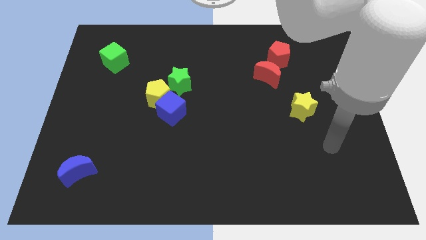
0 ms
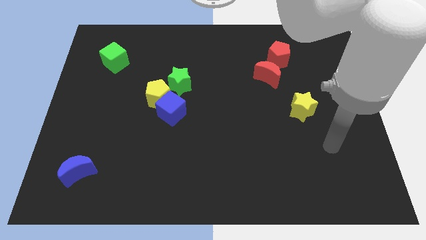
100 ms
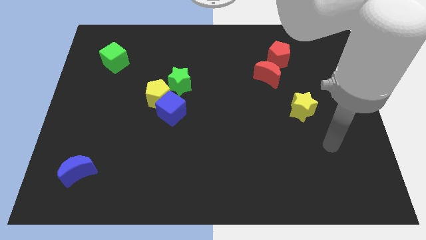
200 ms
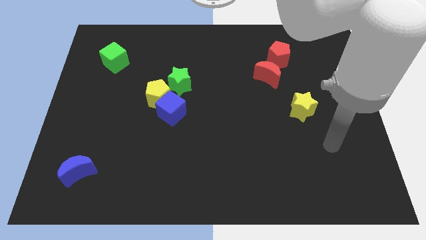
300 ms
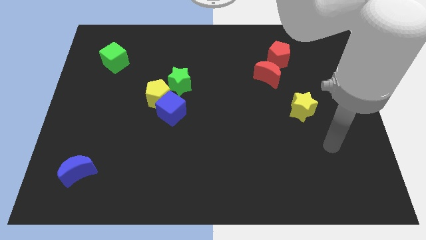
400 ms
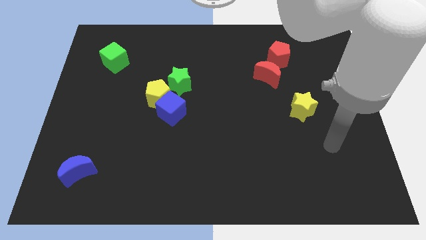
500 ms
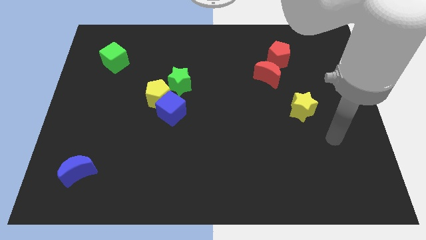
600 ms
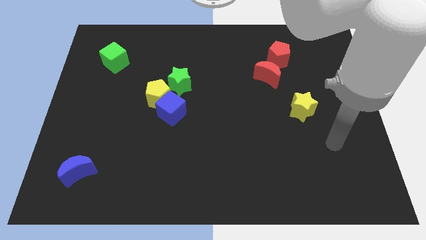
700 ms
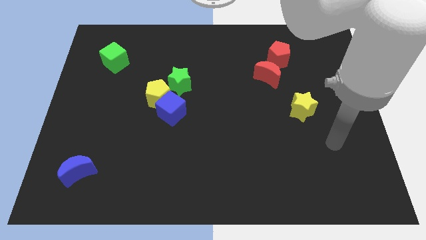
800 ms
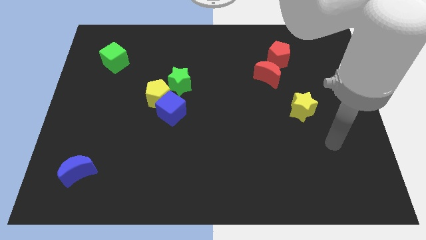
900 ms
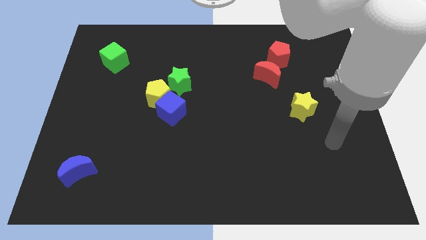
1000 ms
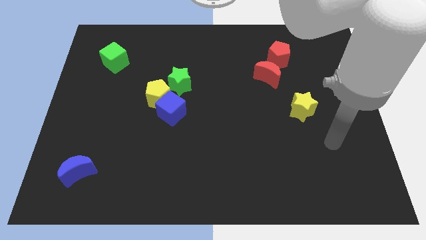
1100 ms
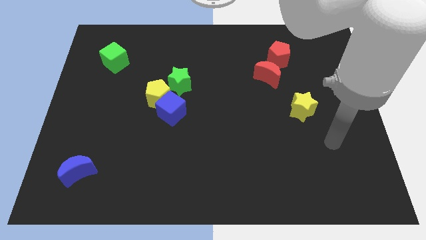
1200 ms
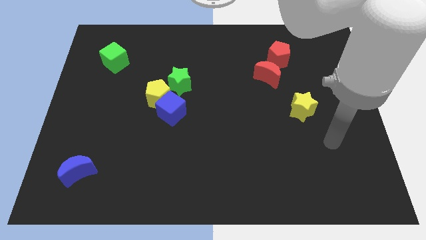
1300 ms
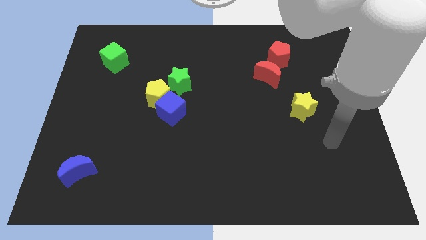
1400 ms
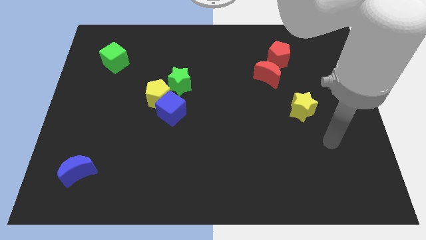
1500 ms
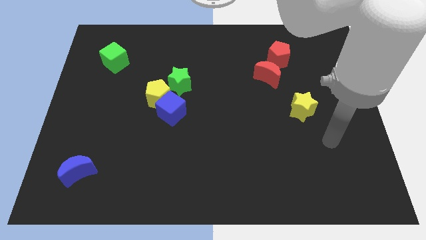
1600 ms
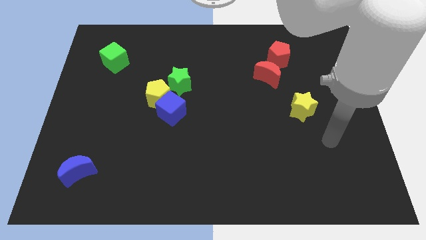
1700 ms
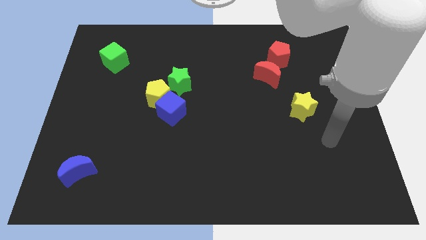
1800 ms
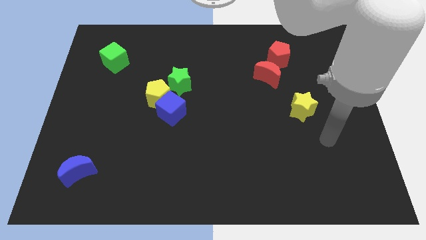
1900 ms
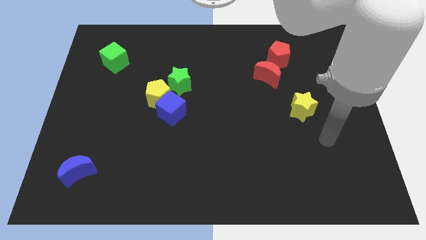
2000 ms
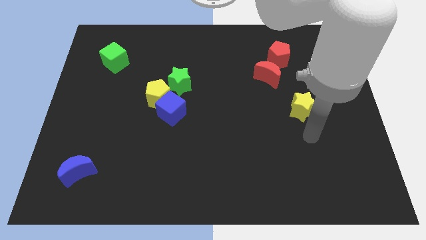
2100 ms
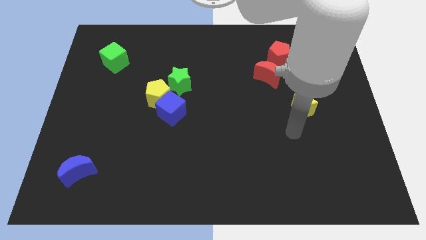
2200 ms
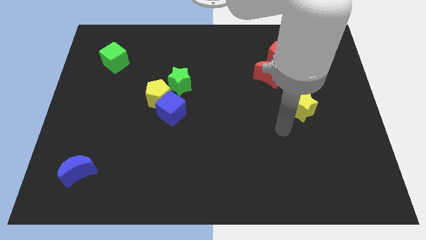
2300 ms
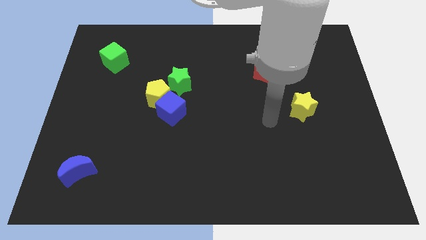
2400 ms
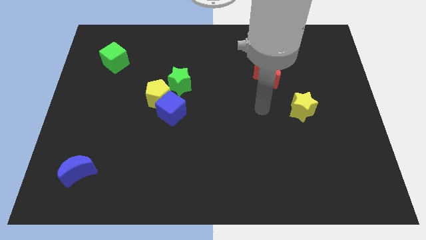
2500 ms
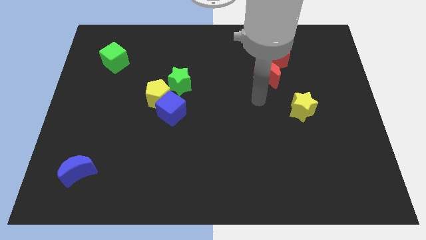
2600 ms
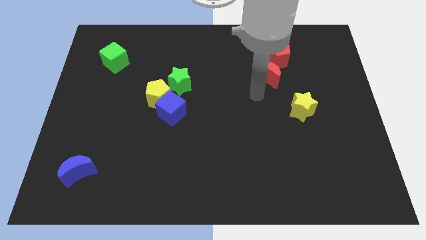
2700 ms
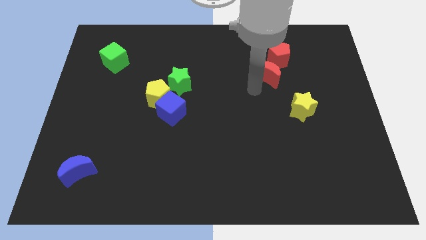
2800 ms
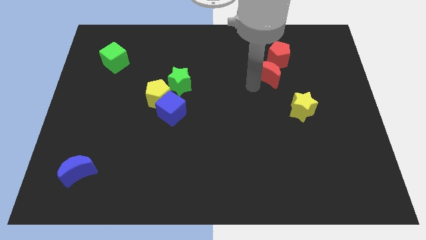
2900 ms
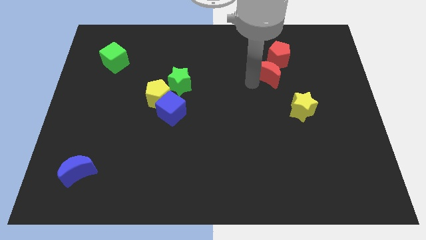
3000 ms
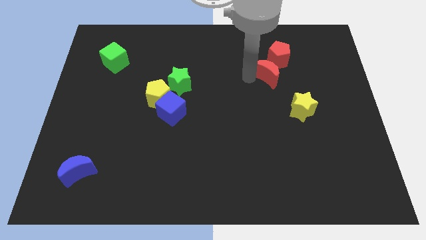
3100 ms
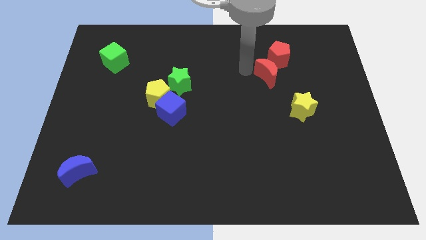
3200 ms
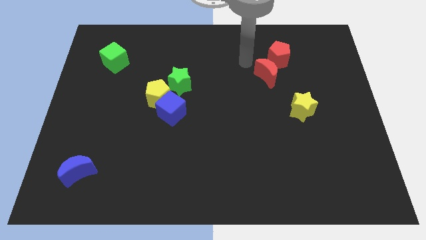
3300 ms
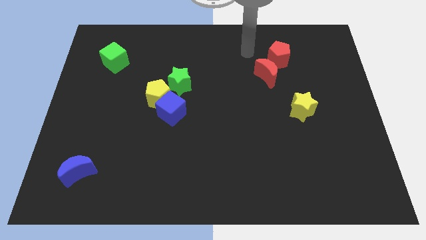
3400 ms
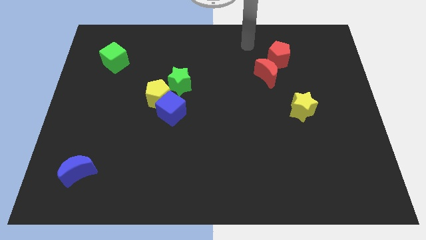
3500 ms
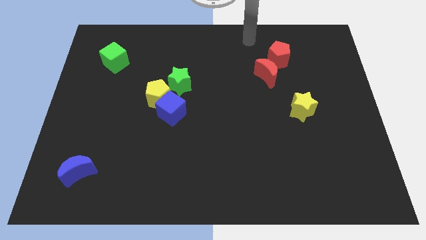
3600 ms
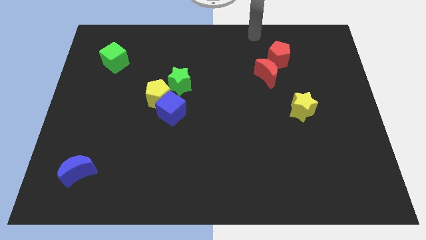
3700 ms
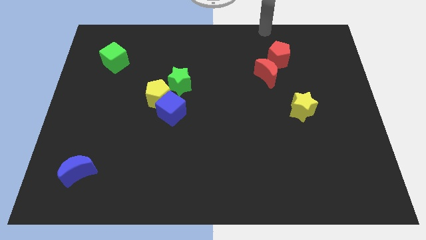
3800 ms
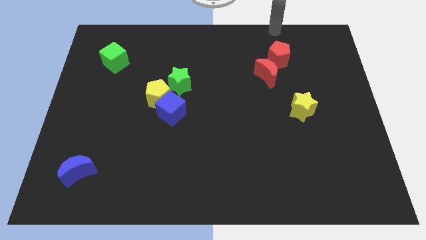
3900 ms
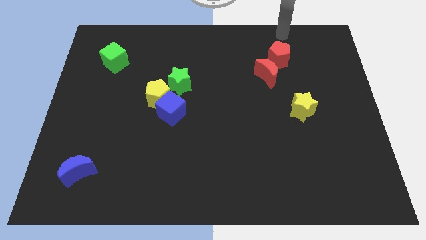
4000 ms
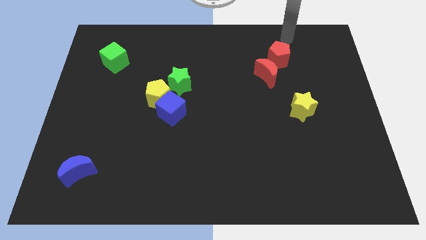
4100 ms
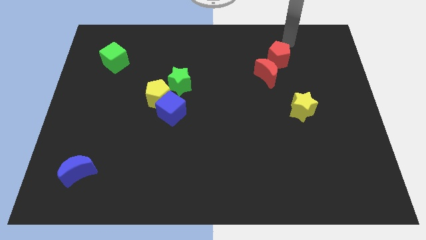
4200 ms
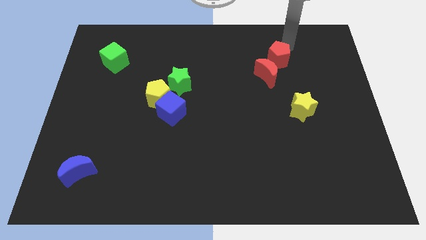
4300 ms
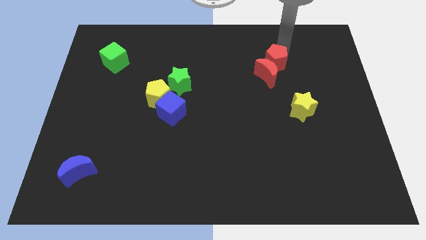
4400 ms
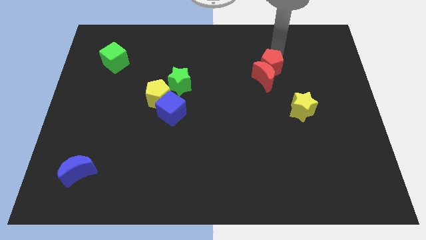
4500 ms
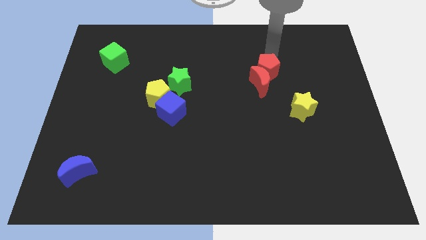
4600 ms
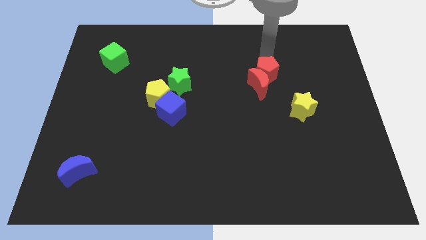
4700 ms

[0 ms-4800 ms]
push the red pentagon into the red moon

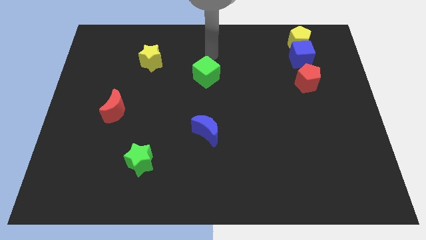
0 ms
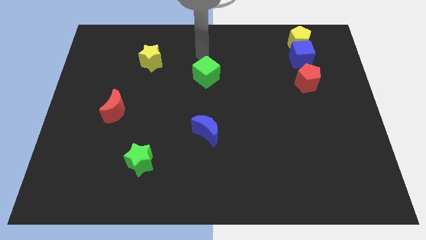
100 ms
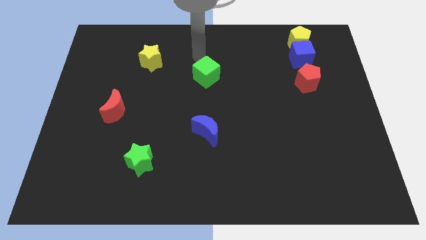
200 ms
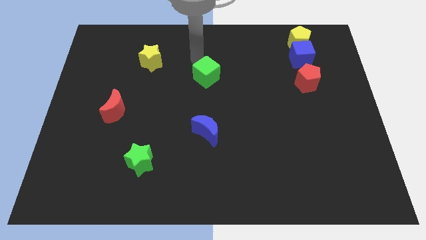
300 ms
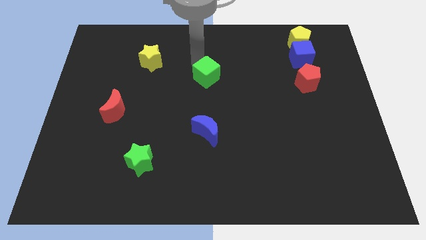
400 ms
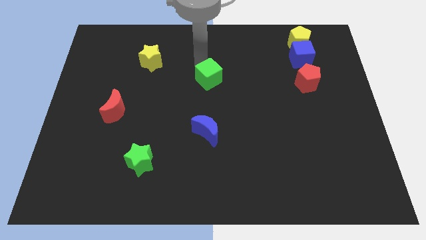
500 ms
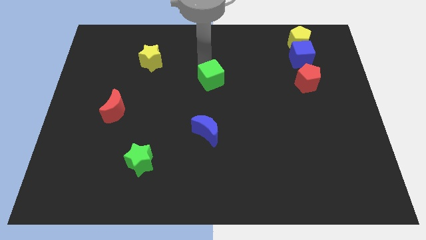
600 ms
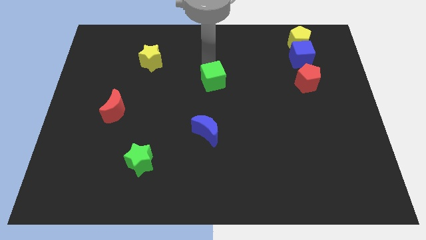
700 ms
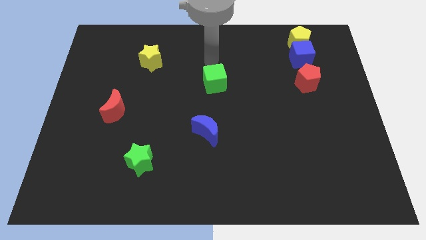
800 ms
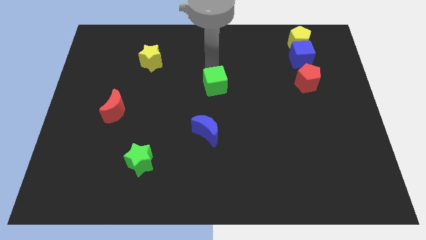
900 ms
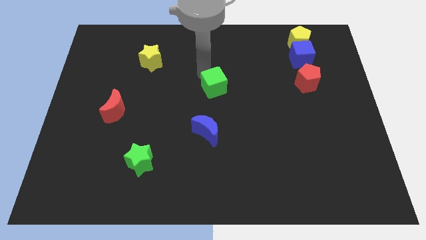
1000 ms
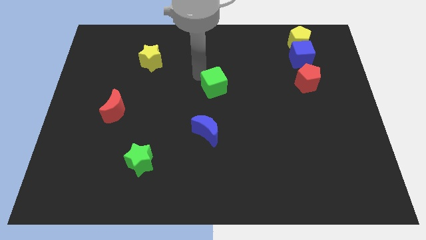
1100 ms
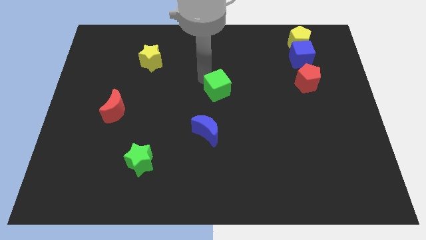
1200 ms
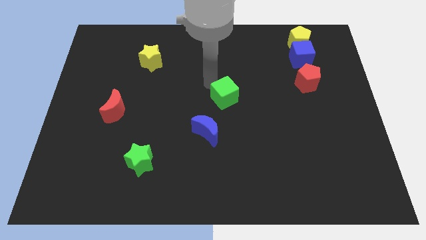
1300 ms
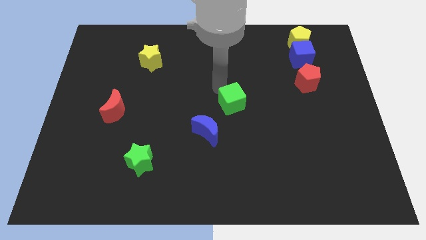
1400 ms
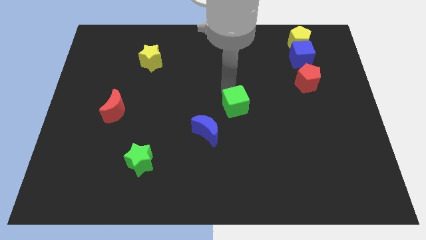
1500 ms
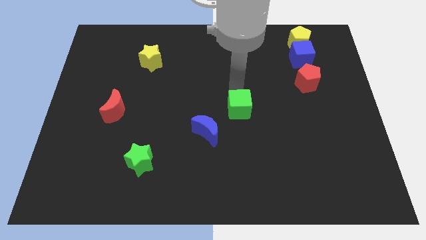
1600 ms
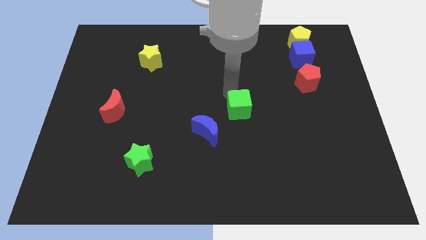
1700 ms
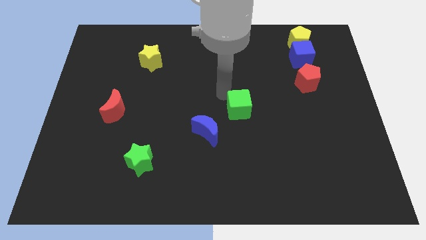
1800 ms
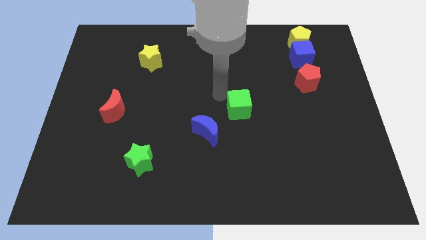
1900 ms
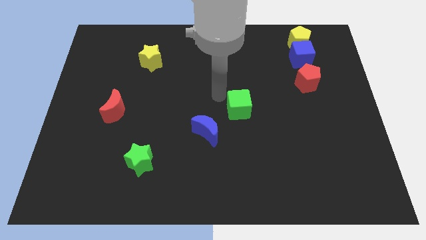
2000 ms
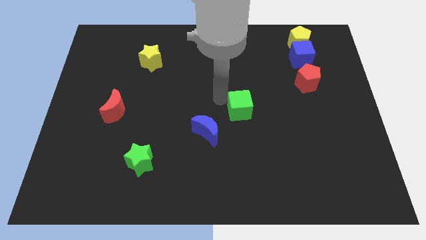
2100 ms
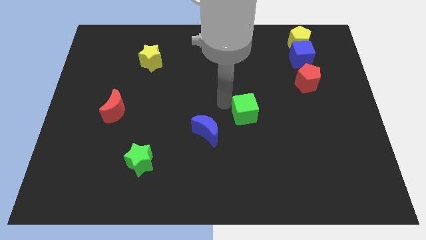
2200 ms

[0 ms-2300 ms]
place the green cube diagonally to the blue moon

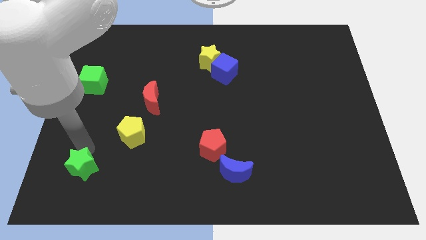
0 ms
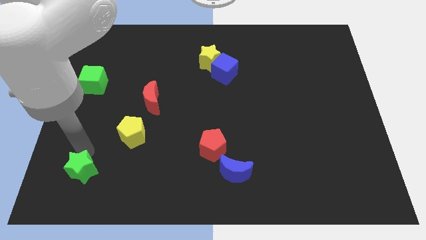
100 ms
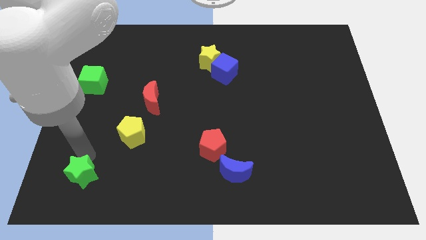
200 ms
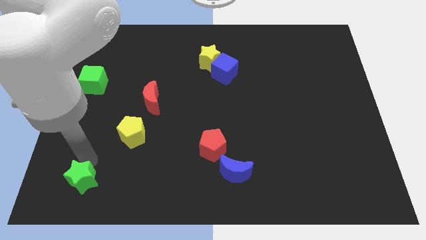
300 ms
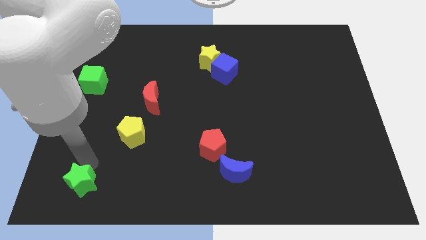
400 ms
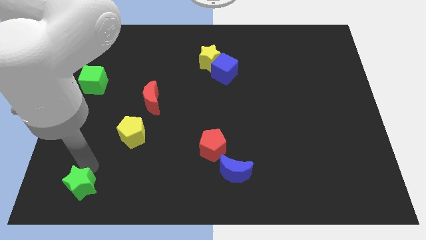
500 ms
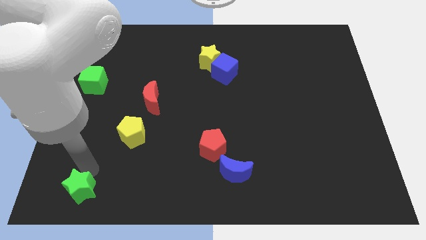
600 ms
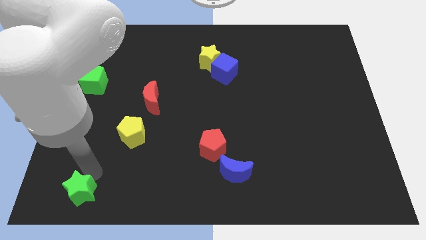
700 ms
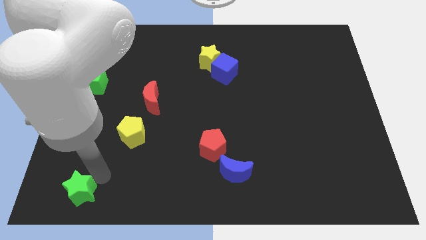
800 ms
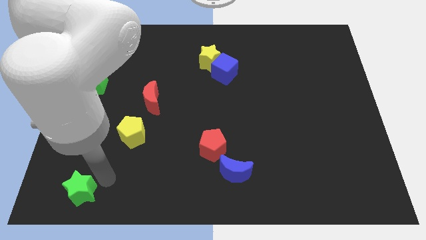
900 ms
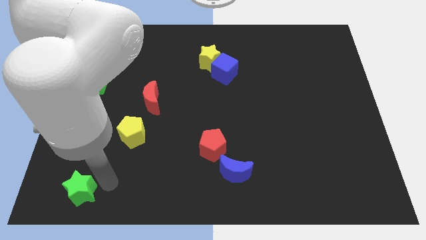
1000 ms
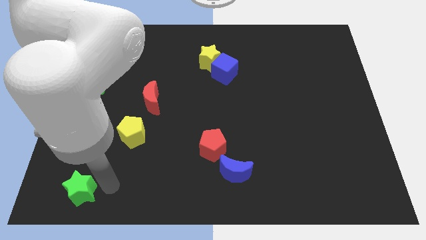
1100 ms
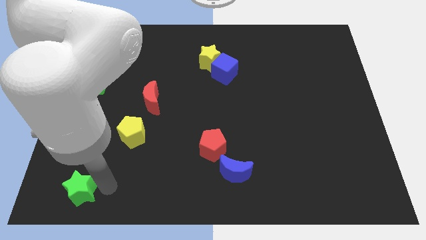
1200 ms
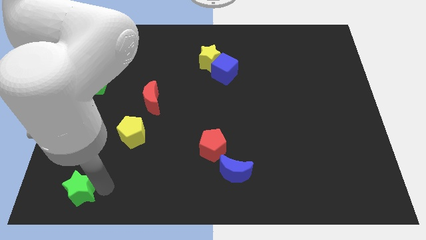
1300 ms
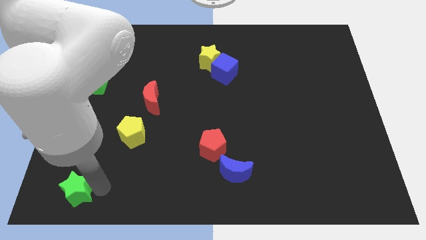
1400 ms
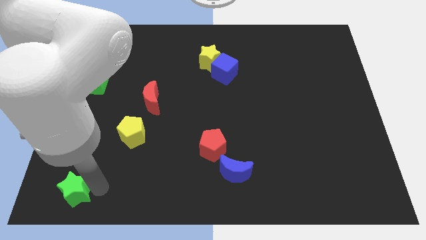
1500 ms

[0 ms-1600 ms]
place the green star vertically below the green cube

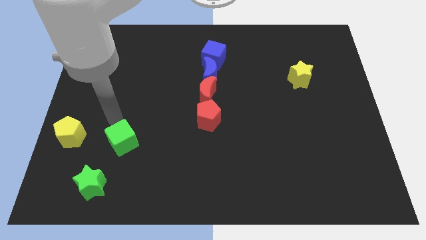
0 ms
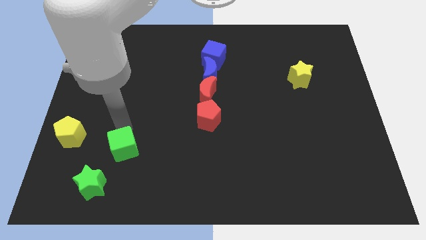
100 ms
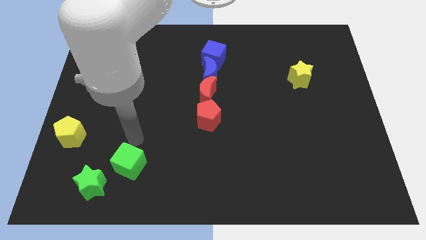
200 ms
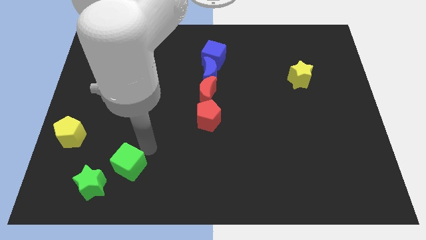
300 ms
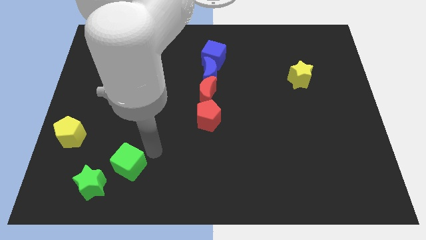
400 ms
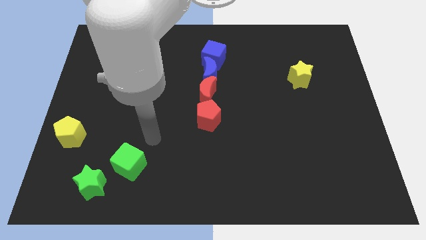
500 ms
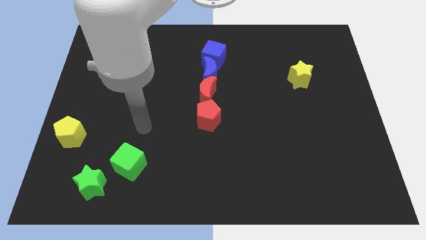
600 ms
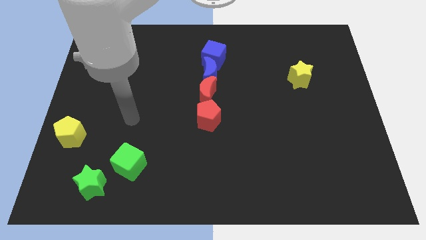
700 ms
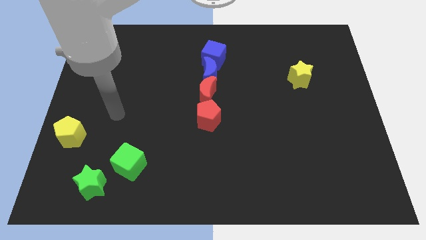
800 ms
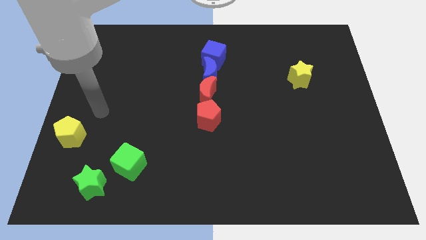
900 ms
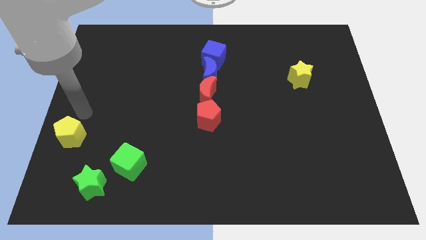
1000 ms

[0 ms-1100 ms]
place the green cube at the top right of the green star
